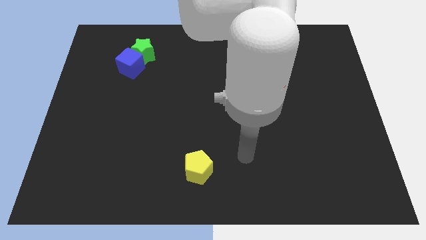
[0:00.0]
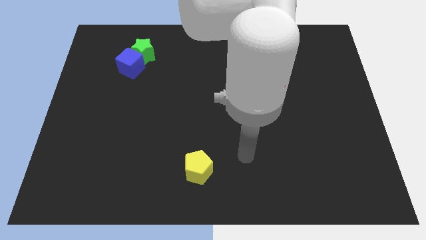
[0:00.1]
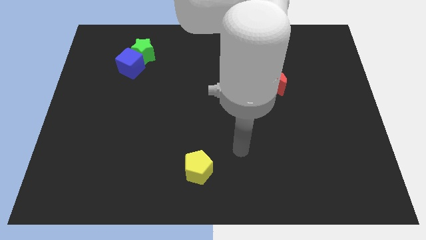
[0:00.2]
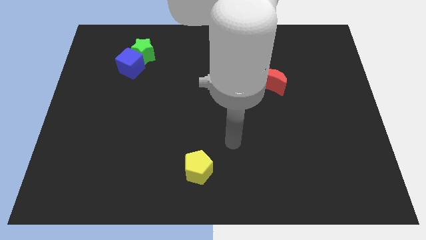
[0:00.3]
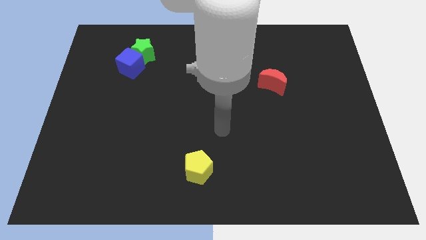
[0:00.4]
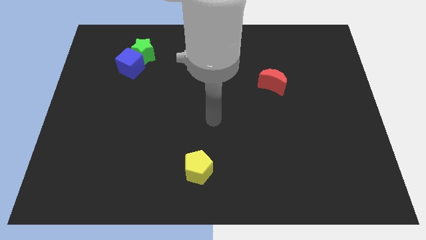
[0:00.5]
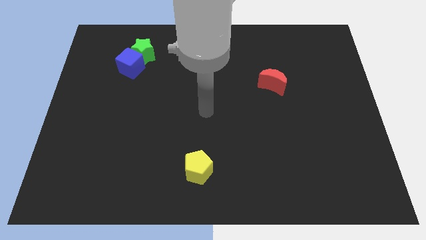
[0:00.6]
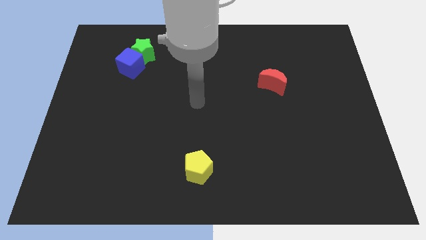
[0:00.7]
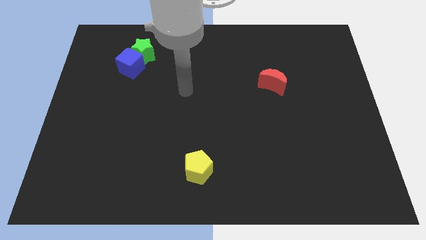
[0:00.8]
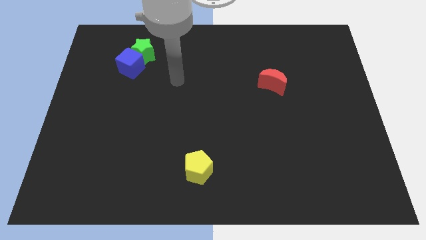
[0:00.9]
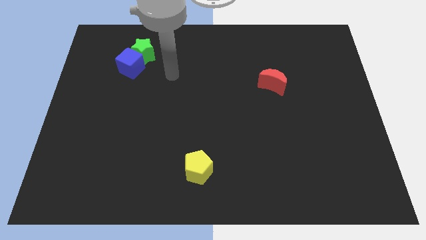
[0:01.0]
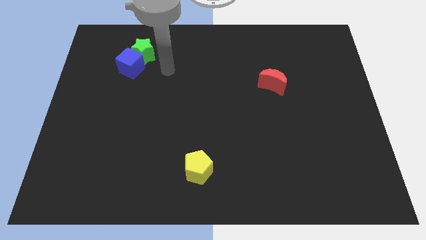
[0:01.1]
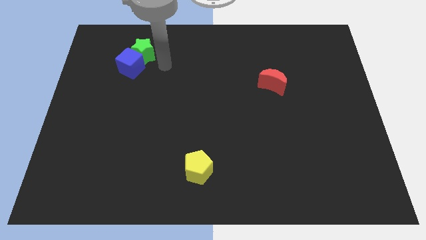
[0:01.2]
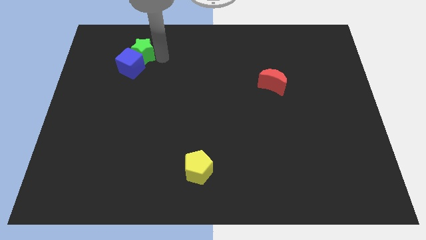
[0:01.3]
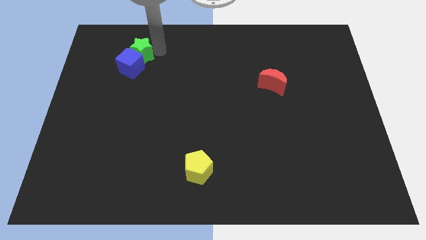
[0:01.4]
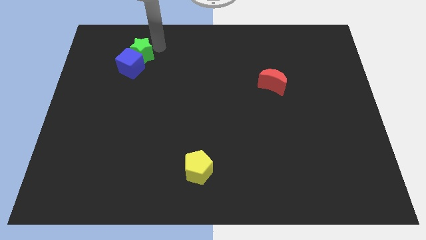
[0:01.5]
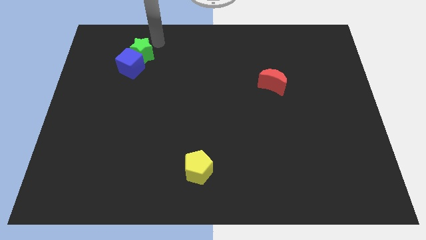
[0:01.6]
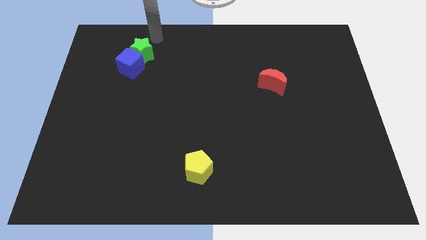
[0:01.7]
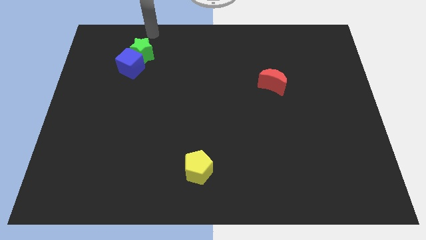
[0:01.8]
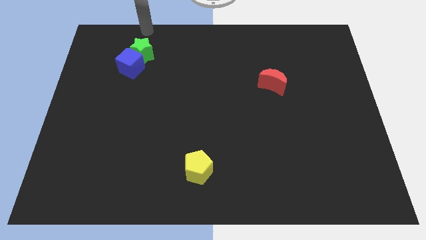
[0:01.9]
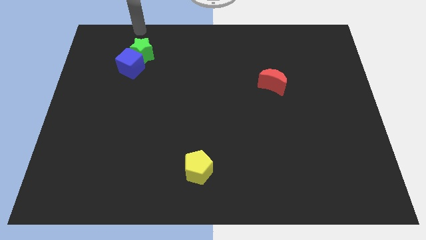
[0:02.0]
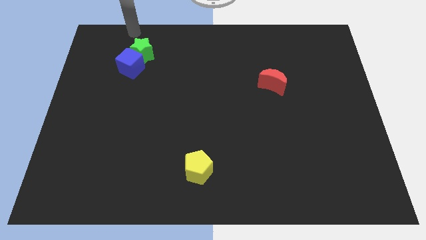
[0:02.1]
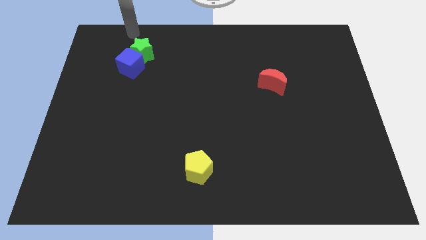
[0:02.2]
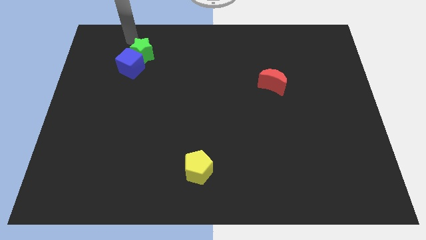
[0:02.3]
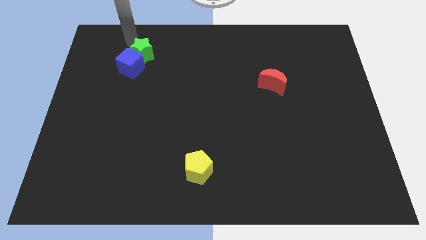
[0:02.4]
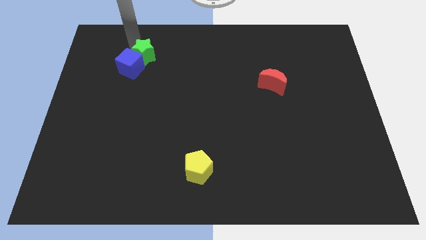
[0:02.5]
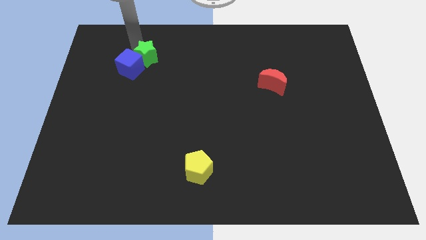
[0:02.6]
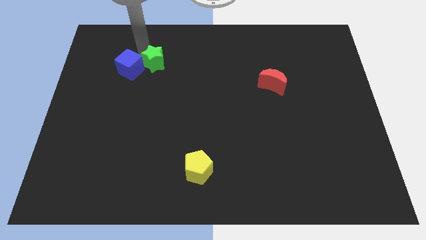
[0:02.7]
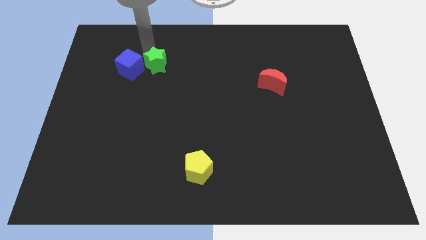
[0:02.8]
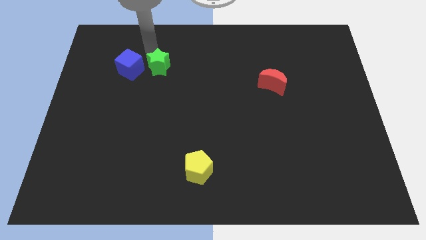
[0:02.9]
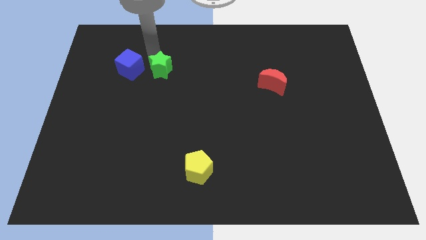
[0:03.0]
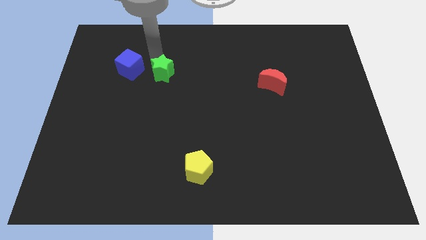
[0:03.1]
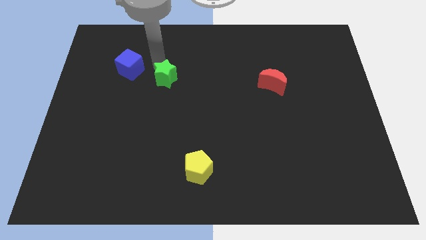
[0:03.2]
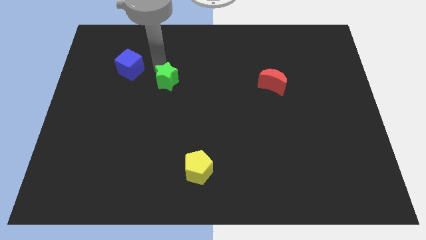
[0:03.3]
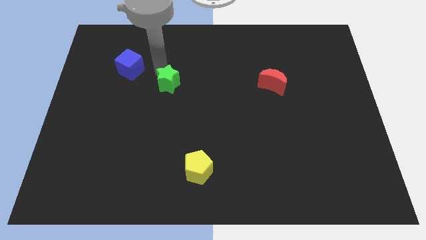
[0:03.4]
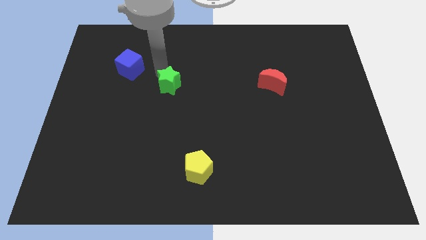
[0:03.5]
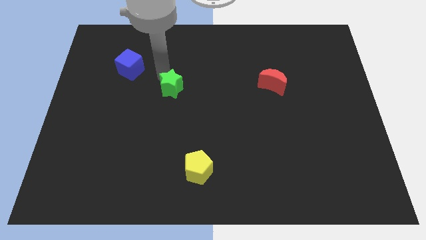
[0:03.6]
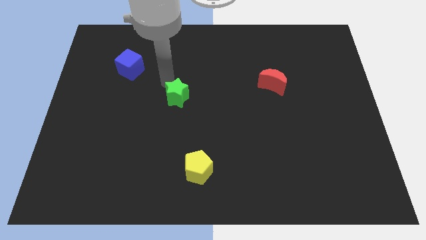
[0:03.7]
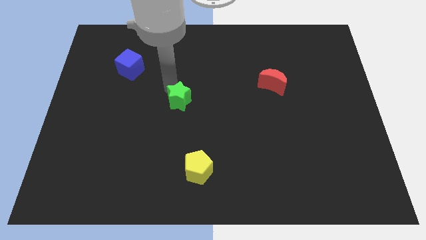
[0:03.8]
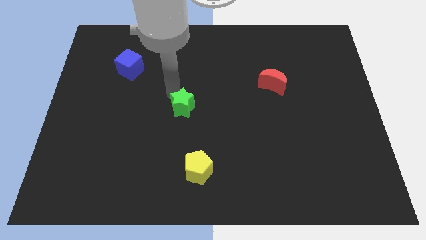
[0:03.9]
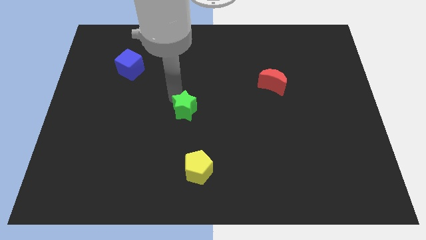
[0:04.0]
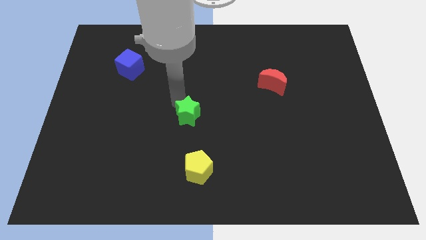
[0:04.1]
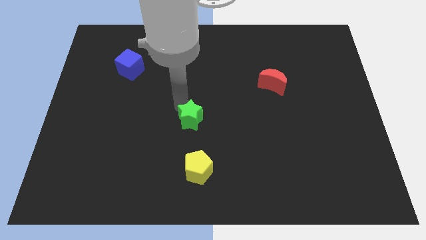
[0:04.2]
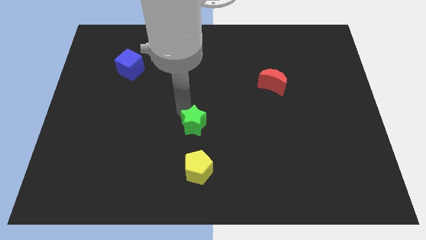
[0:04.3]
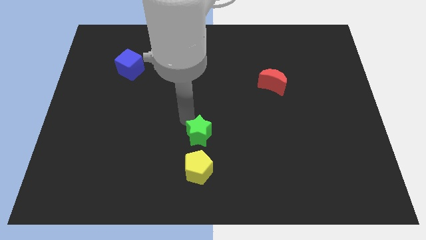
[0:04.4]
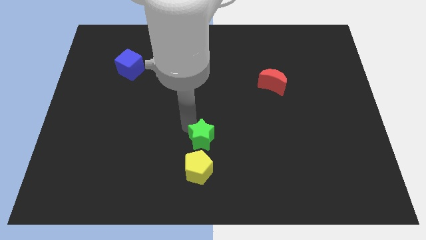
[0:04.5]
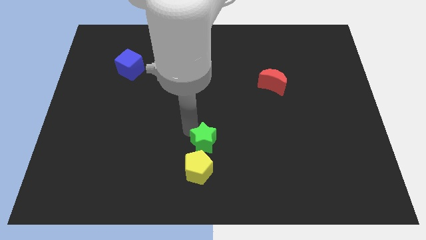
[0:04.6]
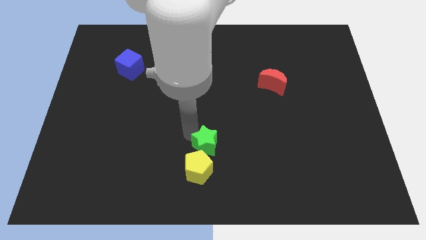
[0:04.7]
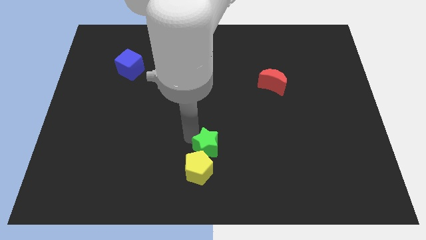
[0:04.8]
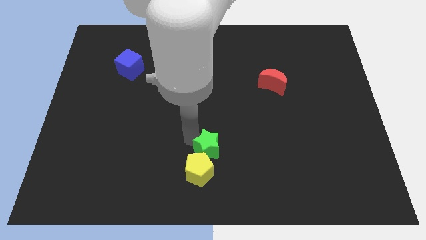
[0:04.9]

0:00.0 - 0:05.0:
move the green star next to the yellow block

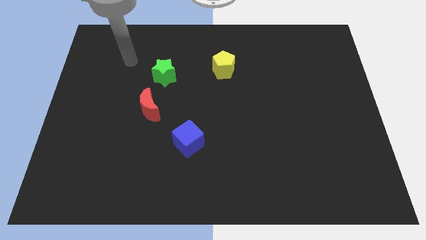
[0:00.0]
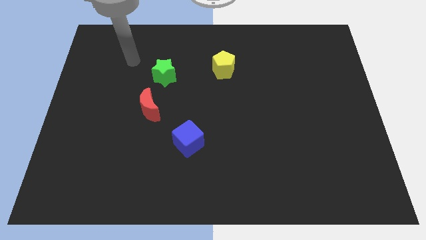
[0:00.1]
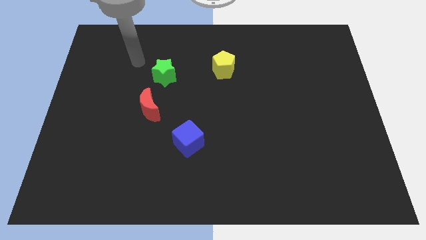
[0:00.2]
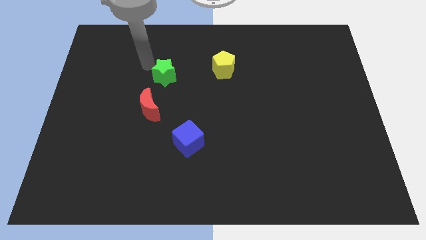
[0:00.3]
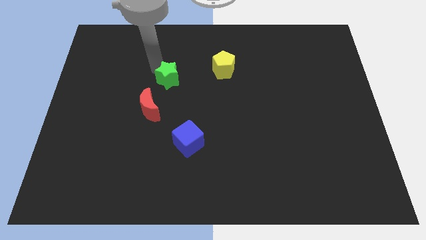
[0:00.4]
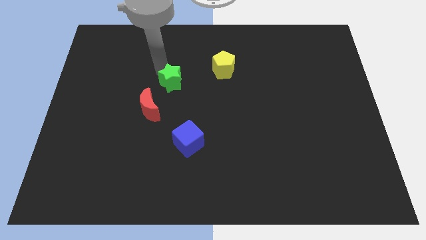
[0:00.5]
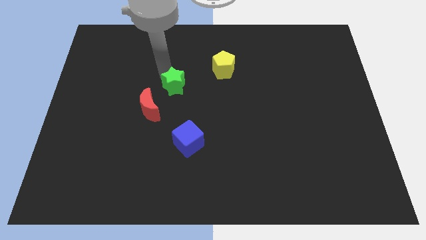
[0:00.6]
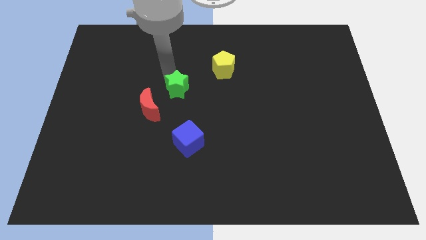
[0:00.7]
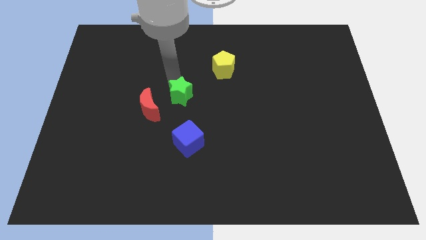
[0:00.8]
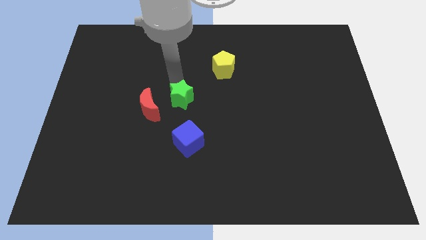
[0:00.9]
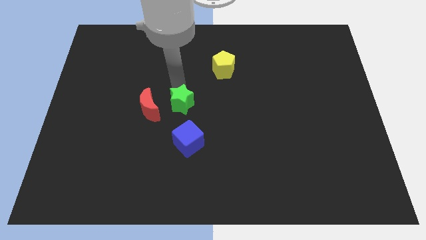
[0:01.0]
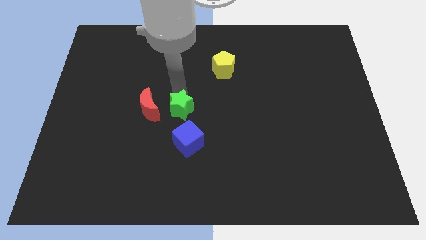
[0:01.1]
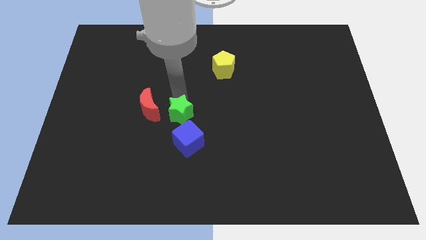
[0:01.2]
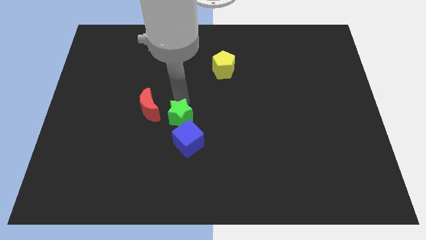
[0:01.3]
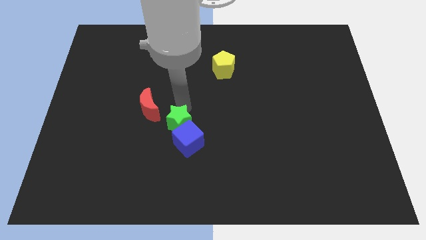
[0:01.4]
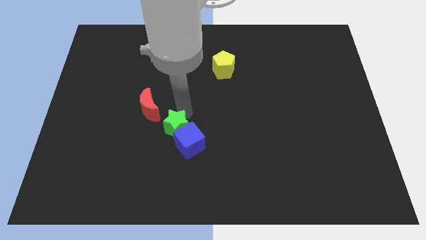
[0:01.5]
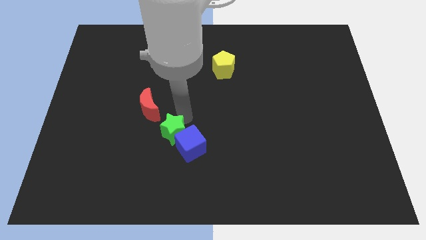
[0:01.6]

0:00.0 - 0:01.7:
slide the star close to the cube

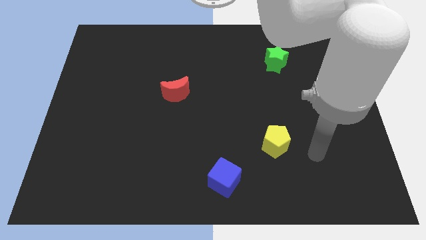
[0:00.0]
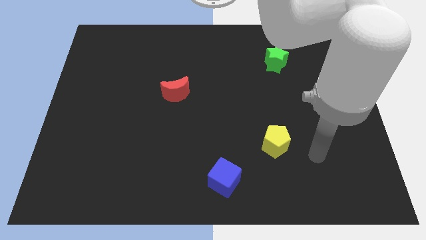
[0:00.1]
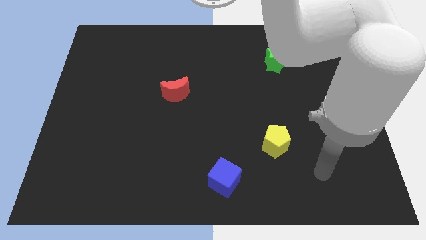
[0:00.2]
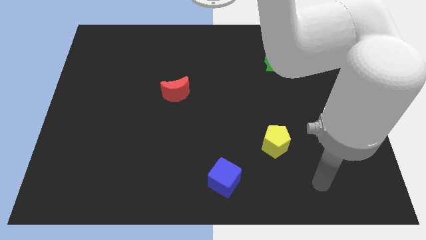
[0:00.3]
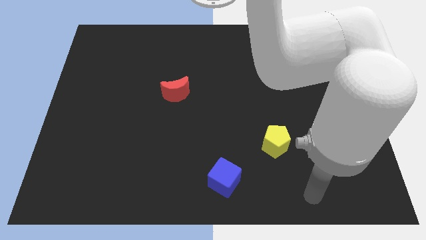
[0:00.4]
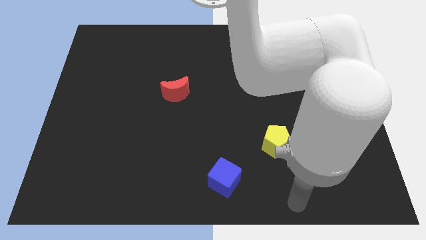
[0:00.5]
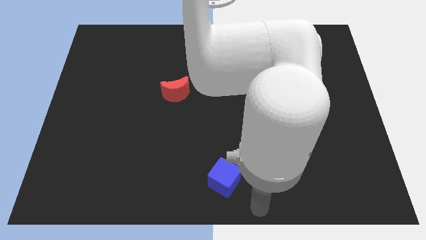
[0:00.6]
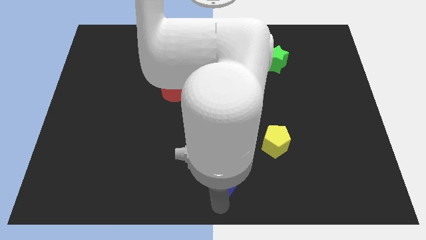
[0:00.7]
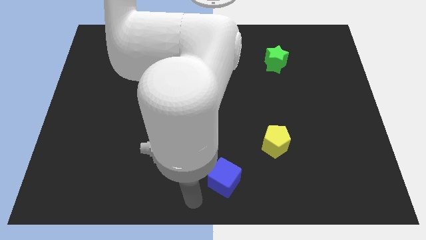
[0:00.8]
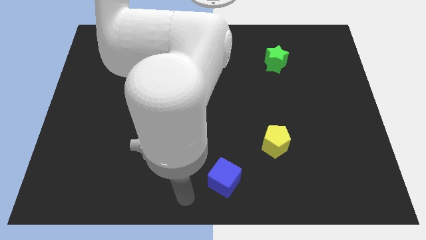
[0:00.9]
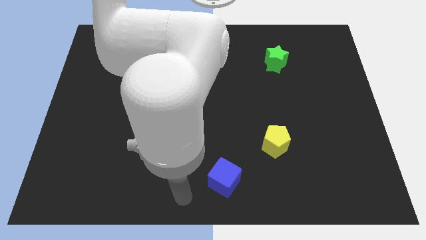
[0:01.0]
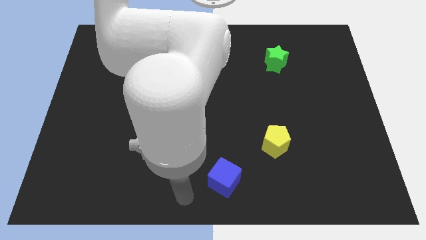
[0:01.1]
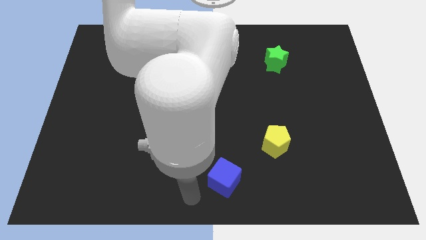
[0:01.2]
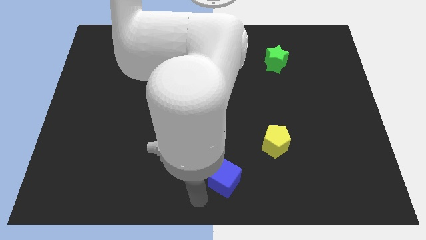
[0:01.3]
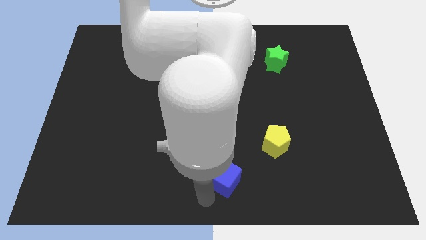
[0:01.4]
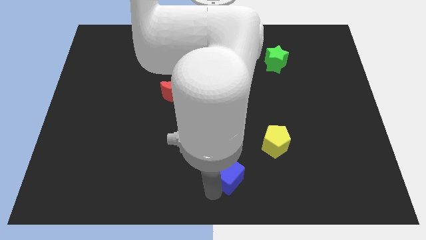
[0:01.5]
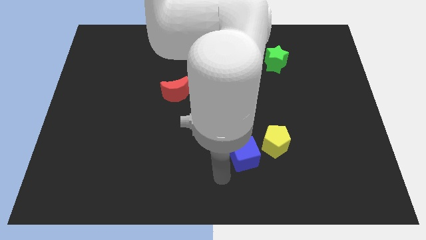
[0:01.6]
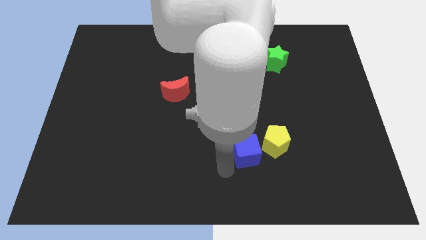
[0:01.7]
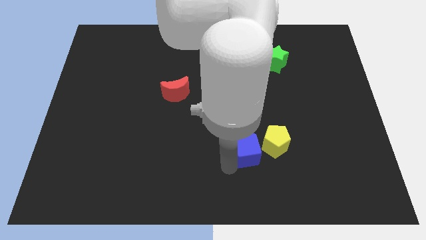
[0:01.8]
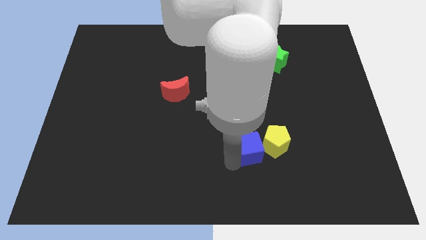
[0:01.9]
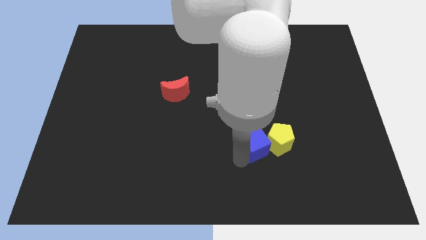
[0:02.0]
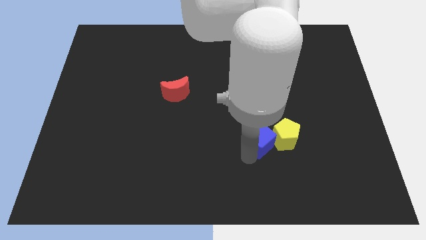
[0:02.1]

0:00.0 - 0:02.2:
slide the cube towards the yellow block
